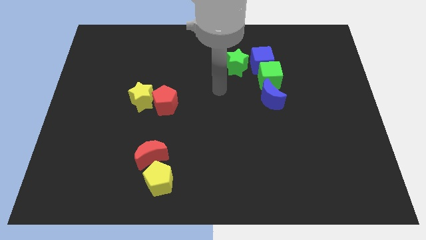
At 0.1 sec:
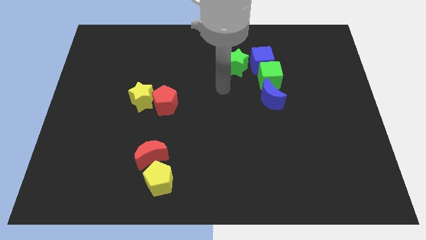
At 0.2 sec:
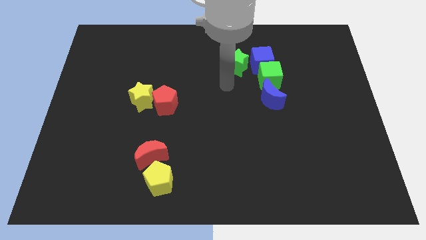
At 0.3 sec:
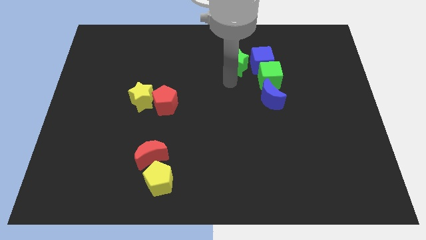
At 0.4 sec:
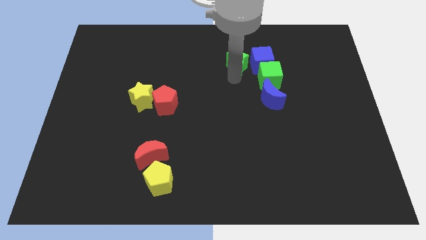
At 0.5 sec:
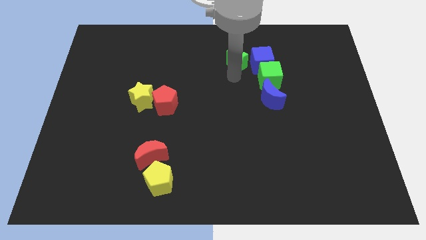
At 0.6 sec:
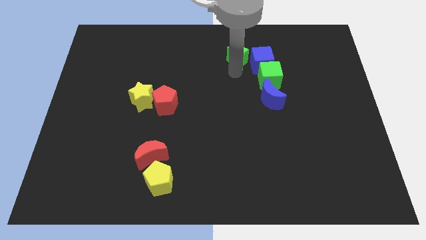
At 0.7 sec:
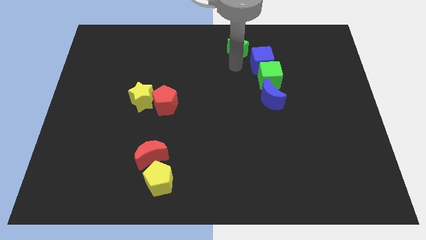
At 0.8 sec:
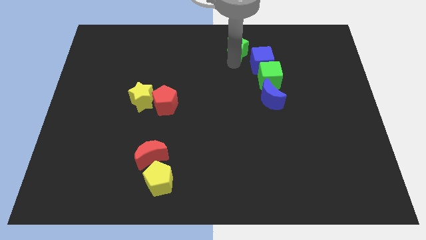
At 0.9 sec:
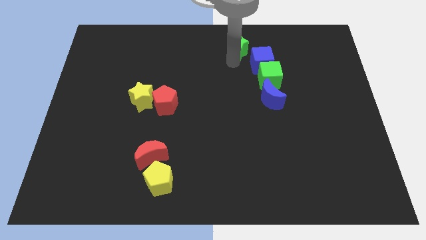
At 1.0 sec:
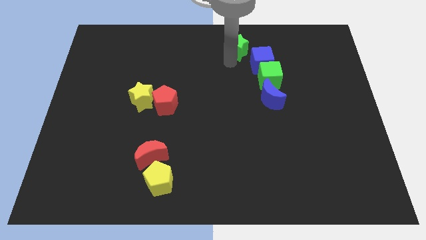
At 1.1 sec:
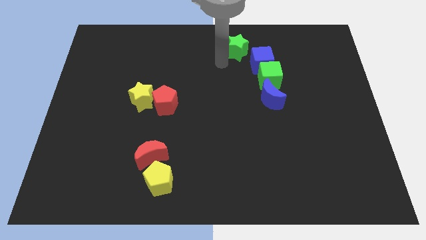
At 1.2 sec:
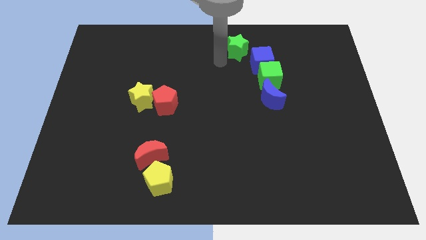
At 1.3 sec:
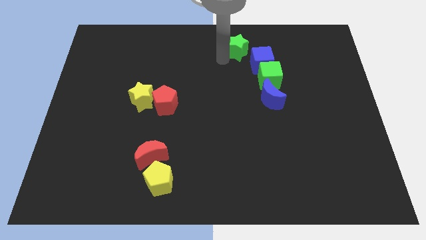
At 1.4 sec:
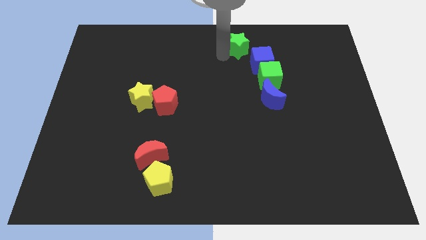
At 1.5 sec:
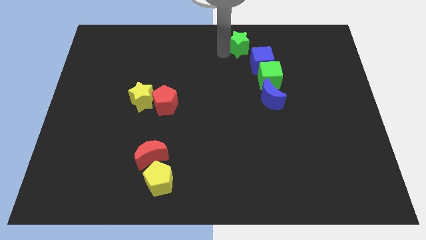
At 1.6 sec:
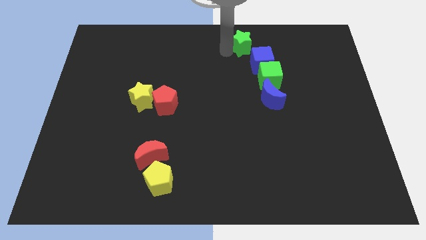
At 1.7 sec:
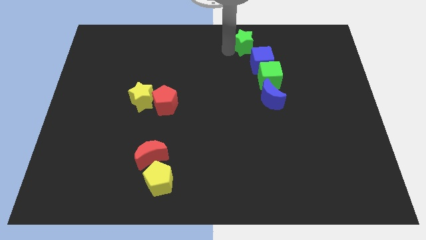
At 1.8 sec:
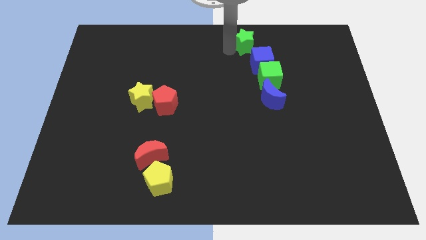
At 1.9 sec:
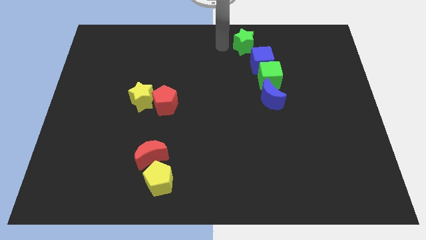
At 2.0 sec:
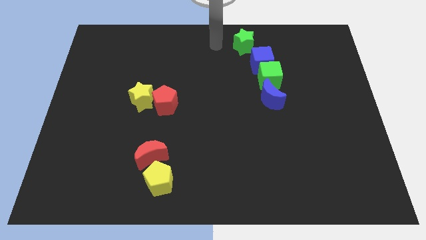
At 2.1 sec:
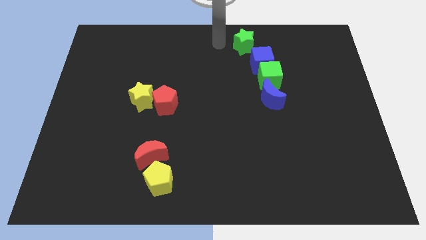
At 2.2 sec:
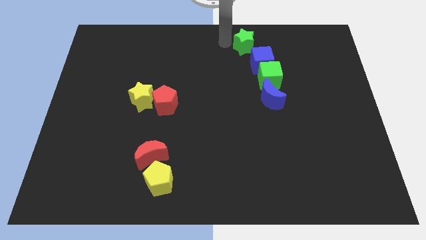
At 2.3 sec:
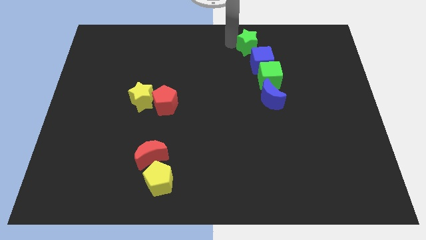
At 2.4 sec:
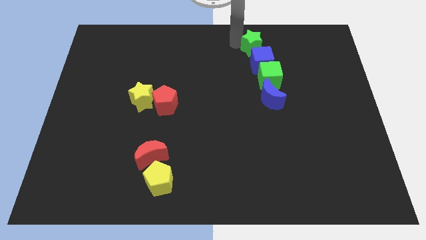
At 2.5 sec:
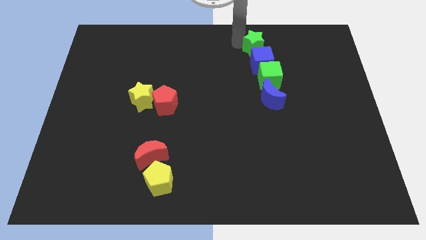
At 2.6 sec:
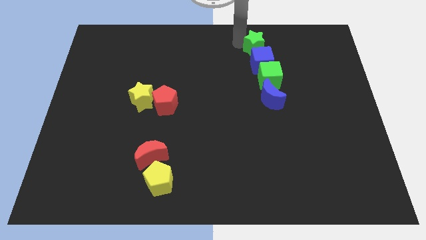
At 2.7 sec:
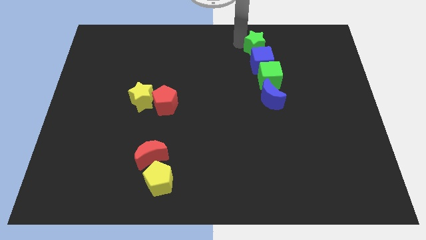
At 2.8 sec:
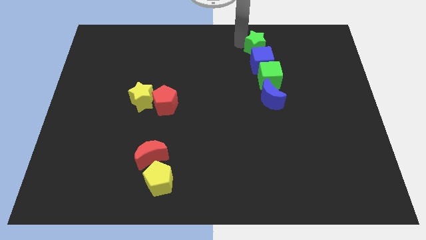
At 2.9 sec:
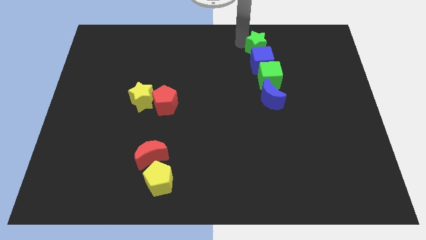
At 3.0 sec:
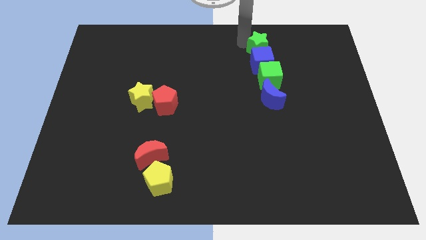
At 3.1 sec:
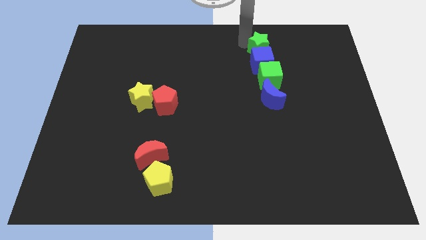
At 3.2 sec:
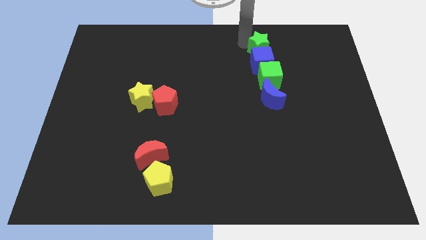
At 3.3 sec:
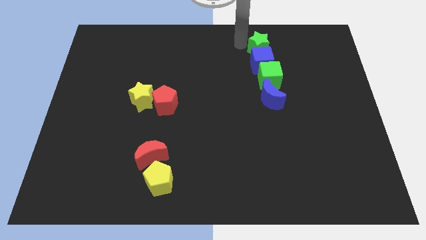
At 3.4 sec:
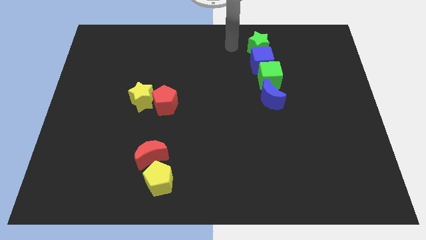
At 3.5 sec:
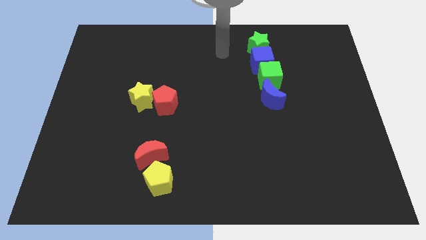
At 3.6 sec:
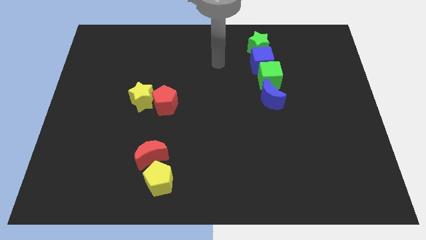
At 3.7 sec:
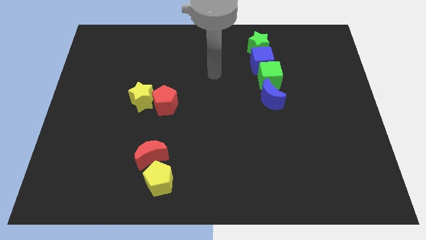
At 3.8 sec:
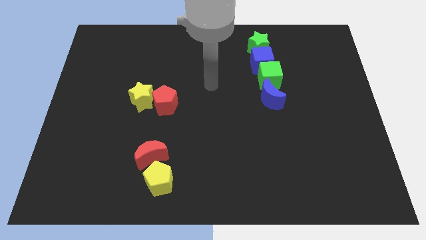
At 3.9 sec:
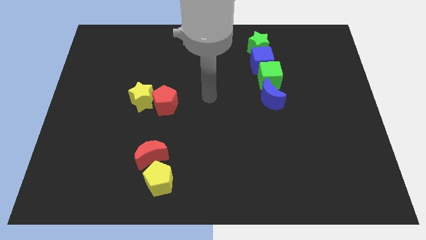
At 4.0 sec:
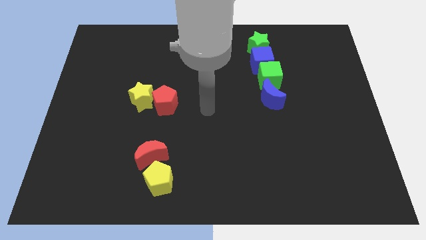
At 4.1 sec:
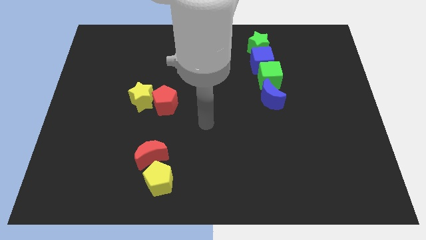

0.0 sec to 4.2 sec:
push the green star to the top of the blue cube

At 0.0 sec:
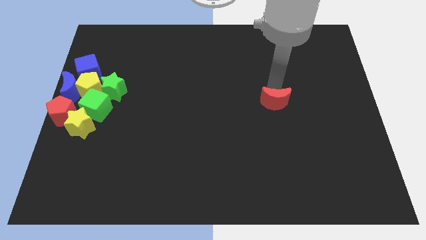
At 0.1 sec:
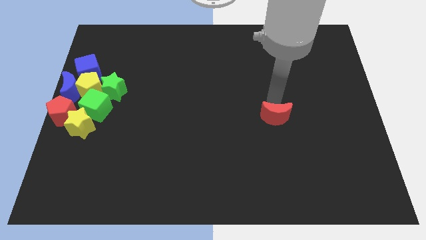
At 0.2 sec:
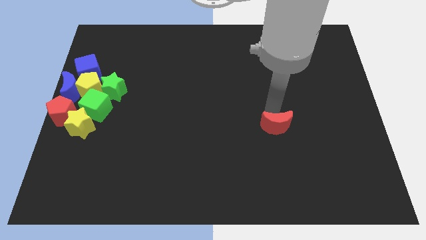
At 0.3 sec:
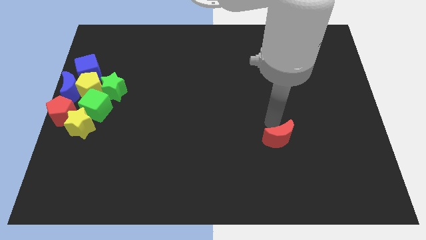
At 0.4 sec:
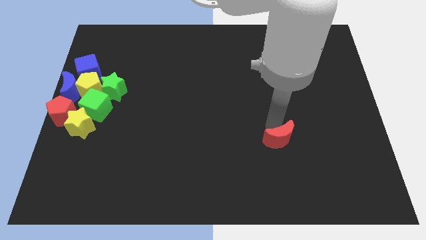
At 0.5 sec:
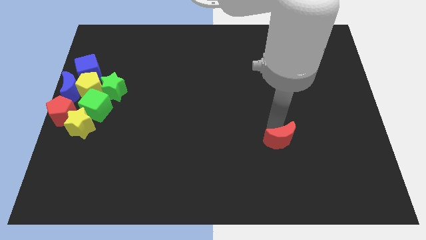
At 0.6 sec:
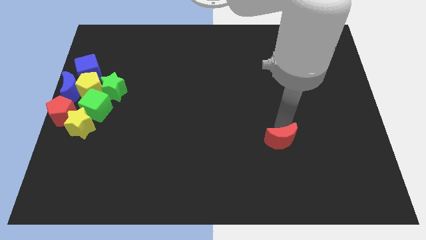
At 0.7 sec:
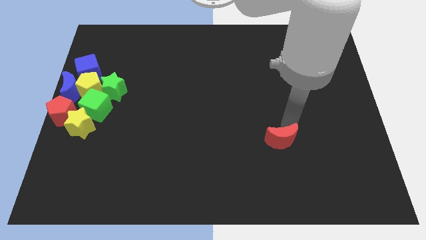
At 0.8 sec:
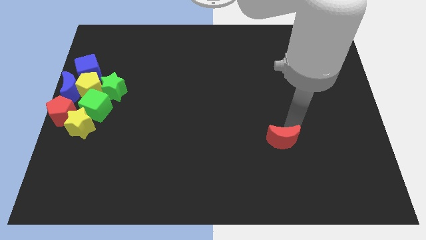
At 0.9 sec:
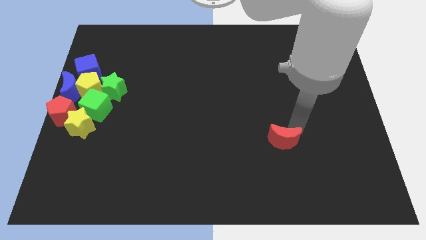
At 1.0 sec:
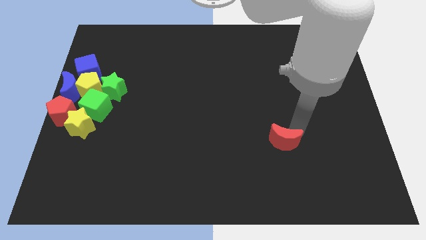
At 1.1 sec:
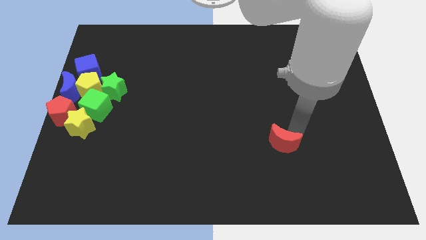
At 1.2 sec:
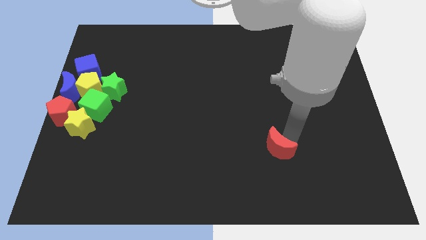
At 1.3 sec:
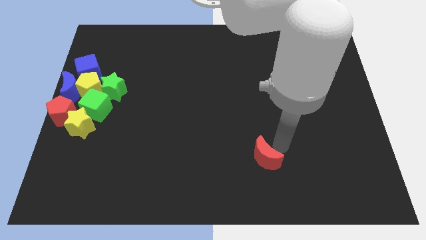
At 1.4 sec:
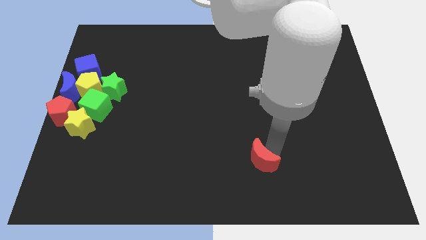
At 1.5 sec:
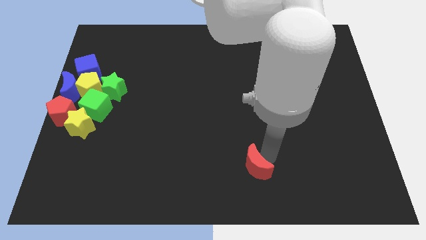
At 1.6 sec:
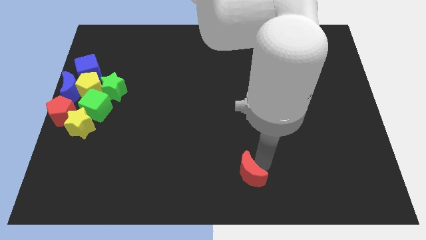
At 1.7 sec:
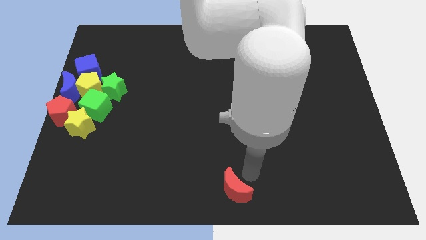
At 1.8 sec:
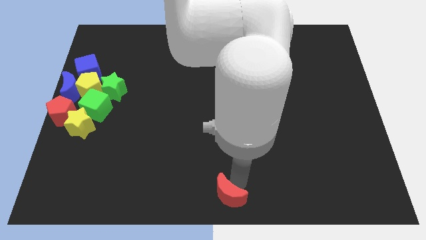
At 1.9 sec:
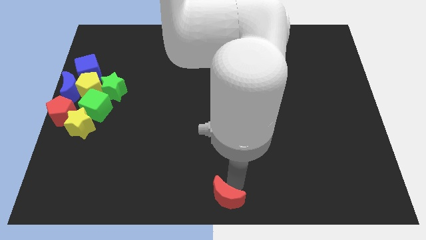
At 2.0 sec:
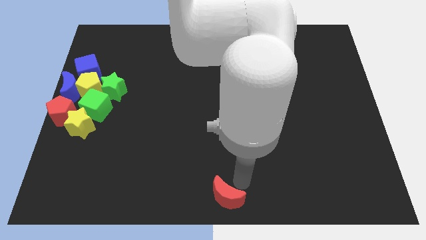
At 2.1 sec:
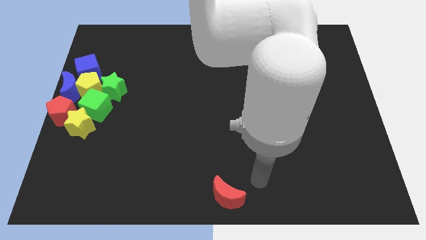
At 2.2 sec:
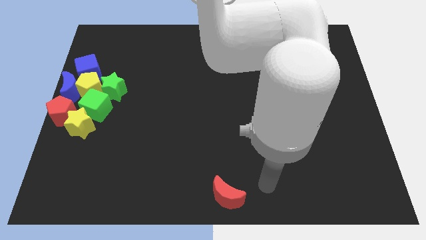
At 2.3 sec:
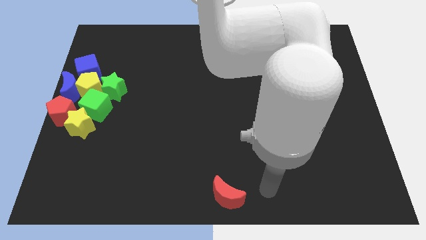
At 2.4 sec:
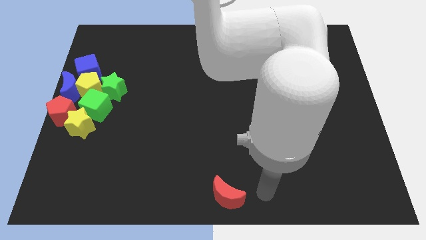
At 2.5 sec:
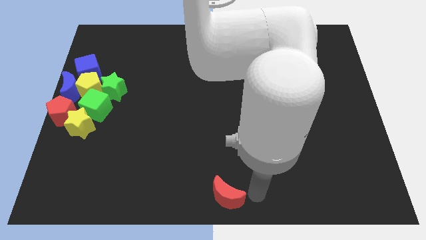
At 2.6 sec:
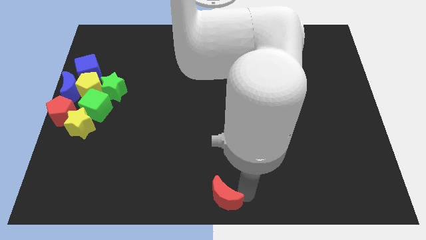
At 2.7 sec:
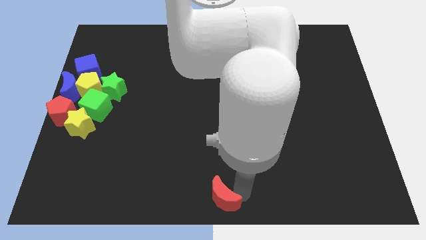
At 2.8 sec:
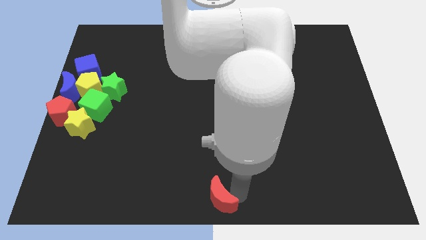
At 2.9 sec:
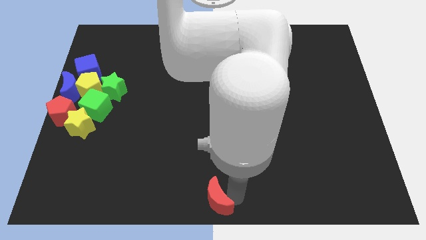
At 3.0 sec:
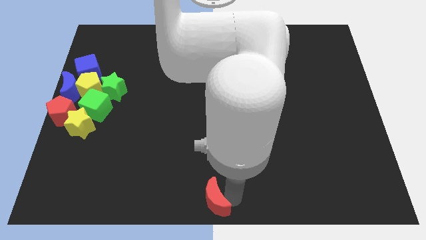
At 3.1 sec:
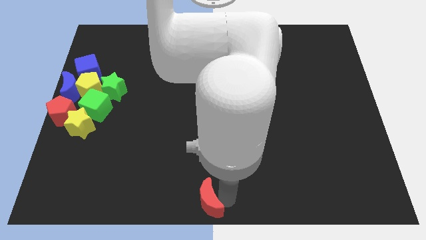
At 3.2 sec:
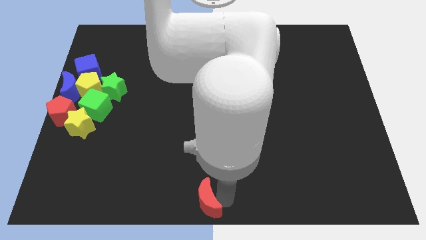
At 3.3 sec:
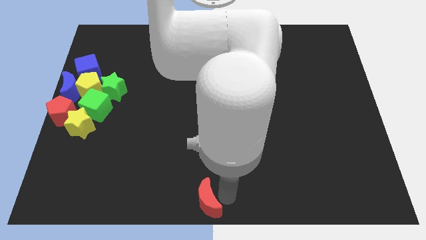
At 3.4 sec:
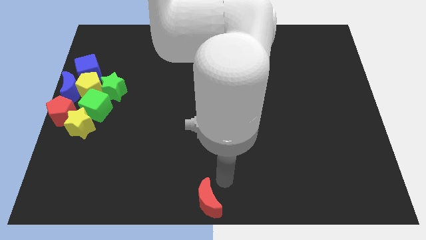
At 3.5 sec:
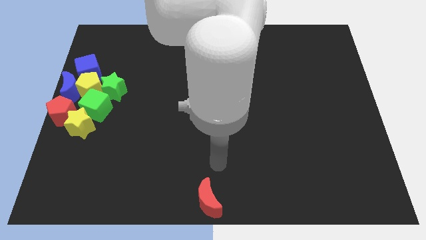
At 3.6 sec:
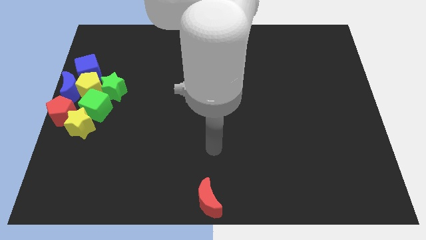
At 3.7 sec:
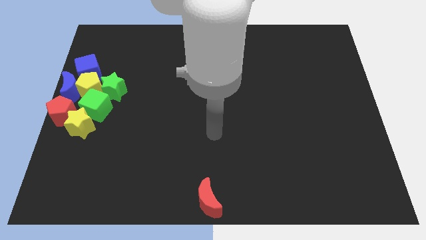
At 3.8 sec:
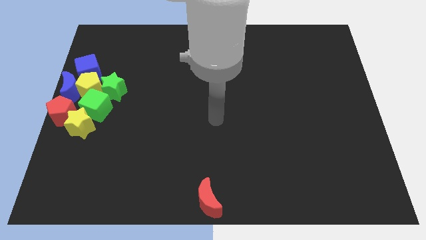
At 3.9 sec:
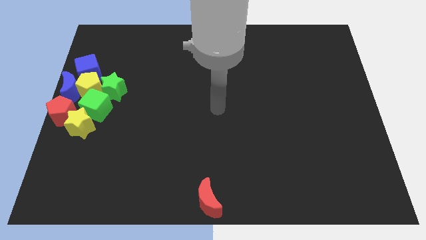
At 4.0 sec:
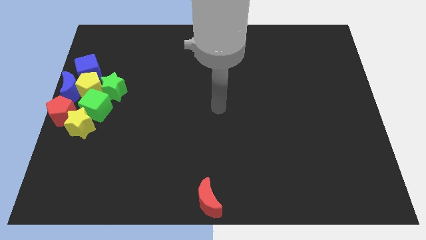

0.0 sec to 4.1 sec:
push the red crescent at the bottom center of the table

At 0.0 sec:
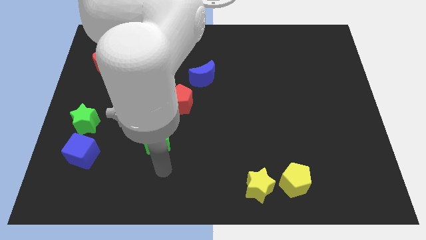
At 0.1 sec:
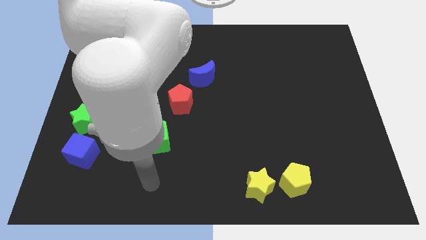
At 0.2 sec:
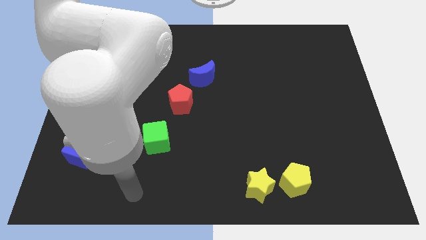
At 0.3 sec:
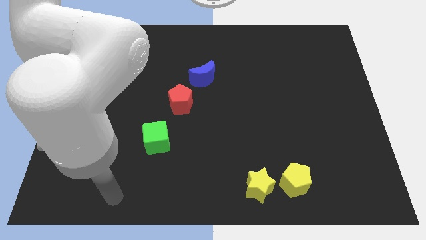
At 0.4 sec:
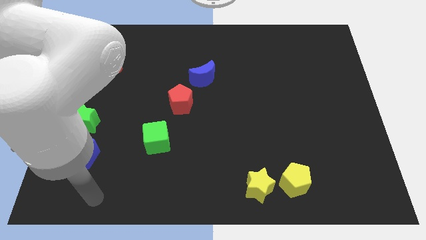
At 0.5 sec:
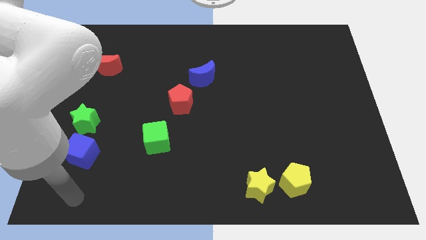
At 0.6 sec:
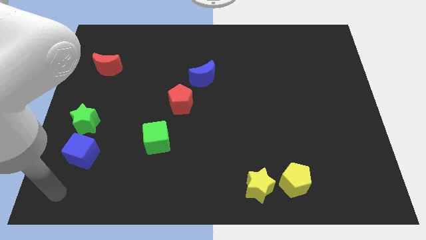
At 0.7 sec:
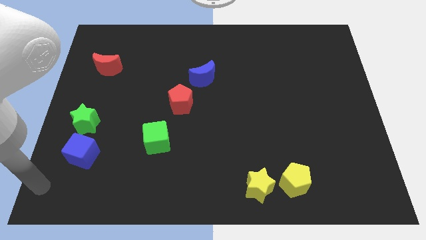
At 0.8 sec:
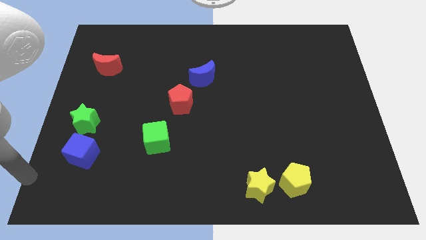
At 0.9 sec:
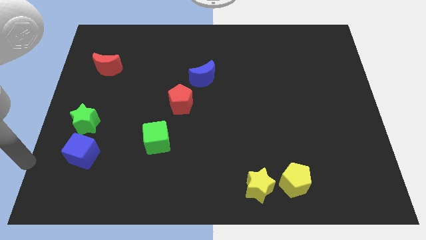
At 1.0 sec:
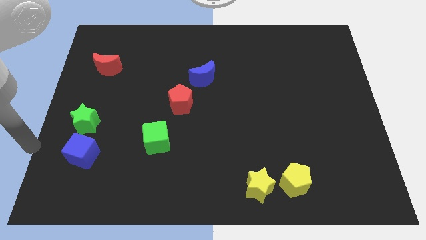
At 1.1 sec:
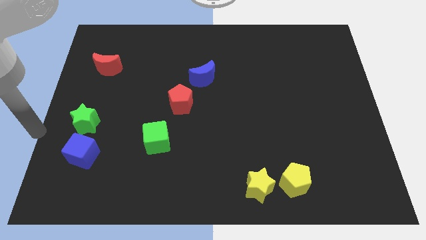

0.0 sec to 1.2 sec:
place your arm to the left of blue cube
